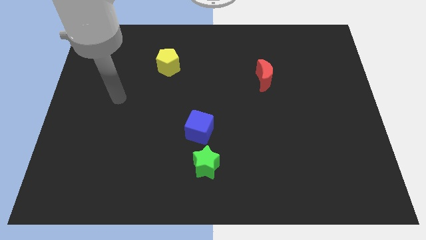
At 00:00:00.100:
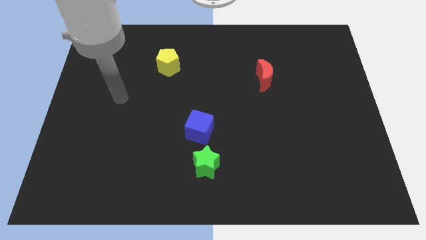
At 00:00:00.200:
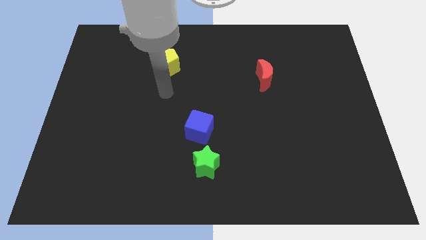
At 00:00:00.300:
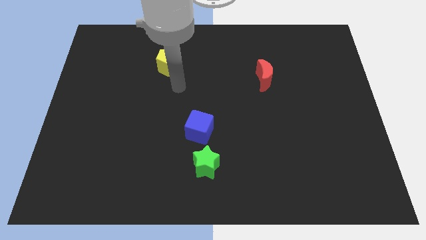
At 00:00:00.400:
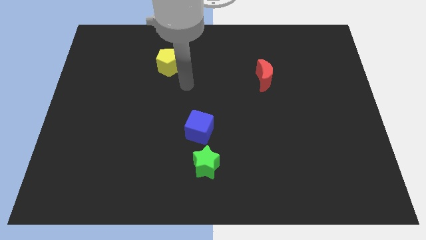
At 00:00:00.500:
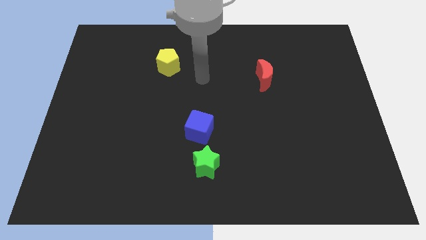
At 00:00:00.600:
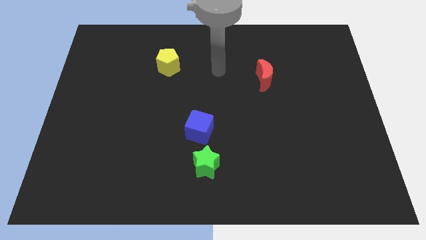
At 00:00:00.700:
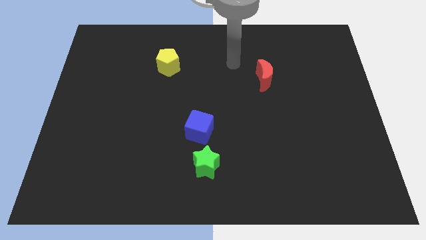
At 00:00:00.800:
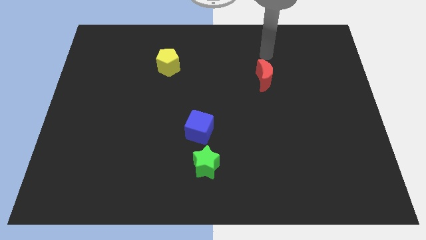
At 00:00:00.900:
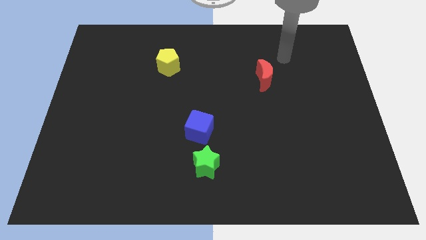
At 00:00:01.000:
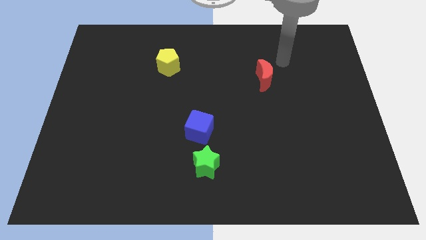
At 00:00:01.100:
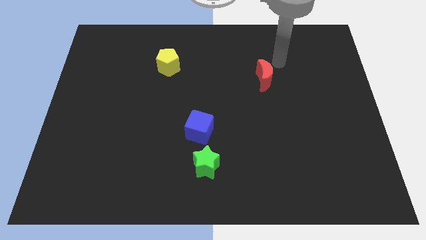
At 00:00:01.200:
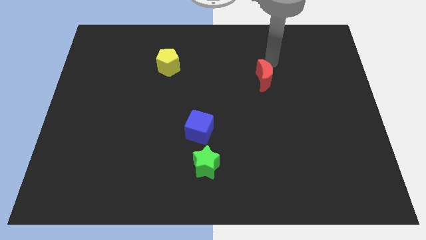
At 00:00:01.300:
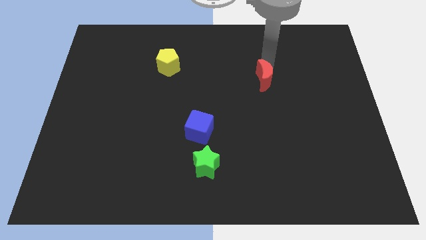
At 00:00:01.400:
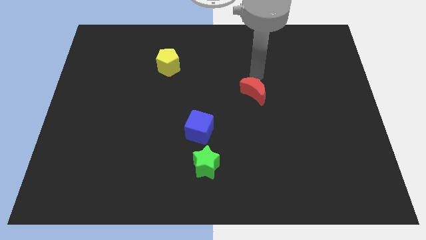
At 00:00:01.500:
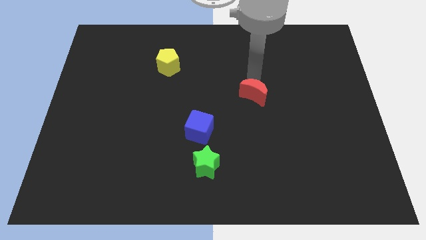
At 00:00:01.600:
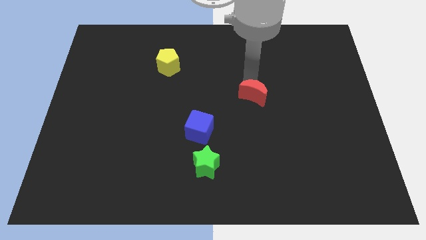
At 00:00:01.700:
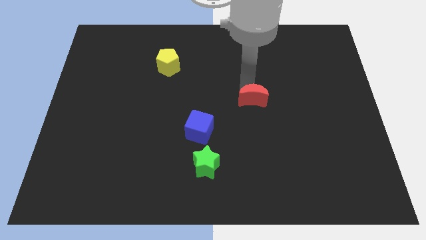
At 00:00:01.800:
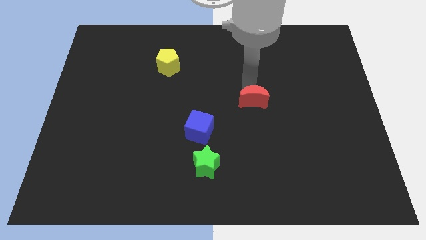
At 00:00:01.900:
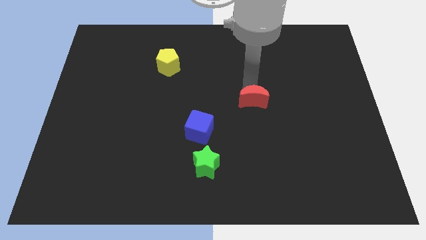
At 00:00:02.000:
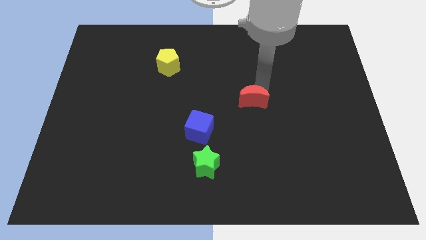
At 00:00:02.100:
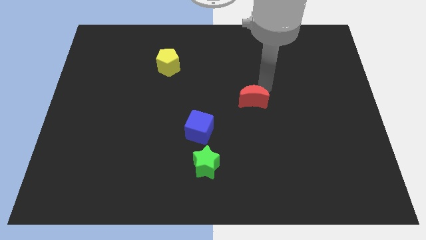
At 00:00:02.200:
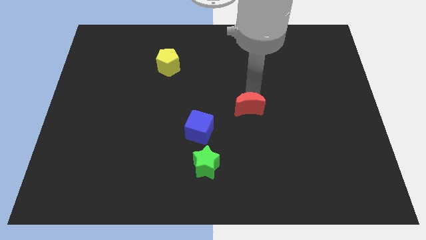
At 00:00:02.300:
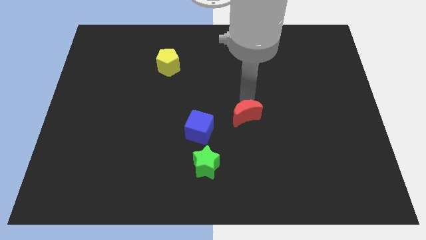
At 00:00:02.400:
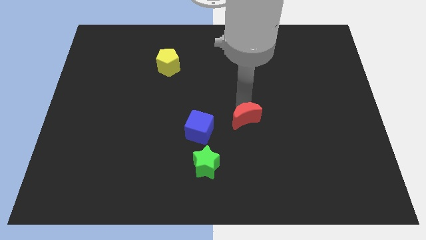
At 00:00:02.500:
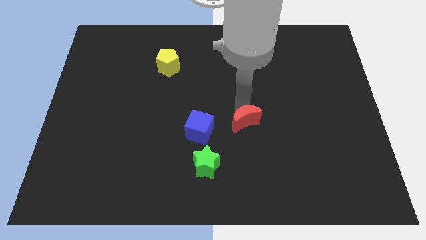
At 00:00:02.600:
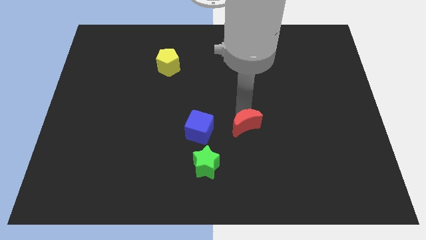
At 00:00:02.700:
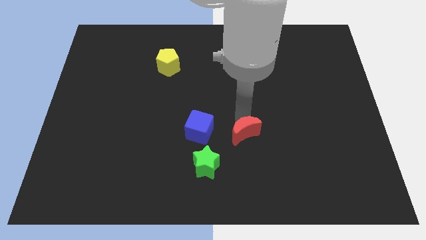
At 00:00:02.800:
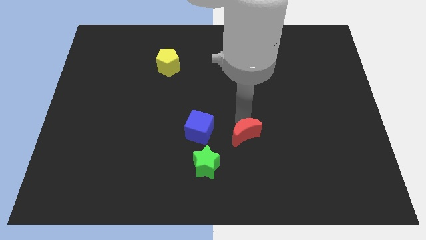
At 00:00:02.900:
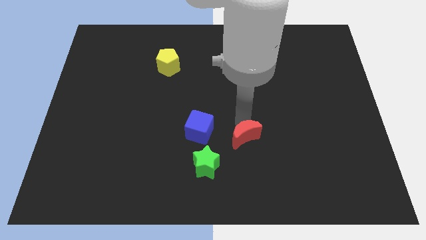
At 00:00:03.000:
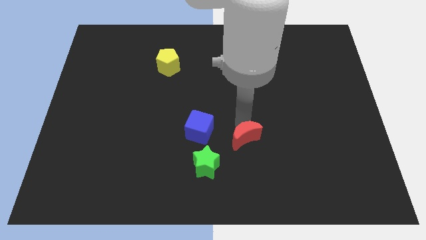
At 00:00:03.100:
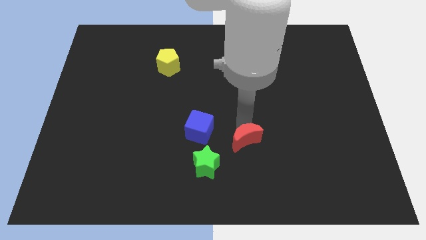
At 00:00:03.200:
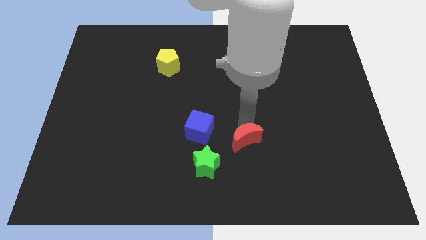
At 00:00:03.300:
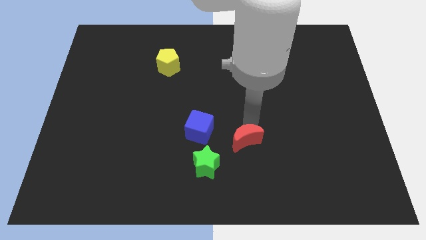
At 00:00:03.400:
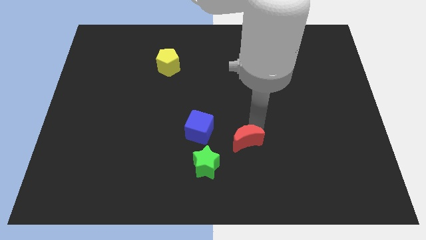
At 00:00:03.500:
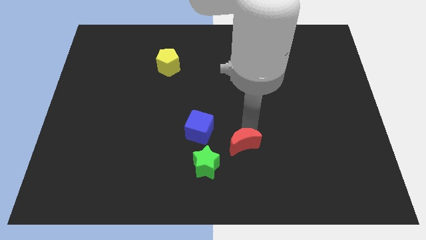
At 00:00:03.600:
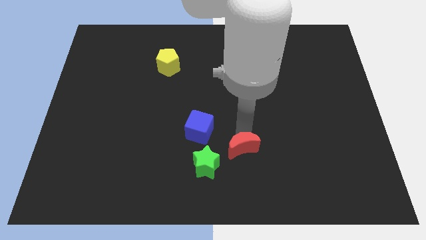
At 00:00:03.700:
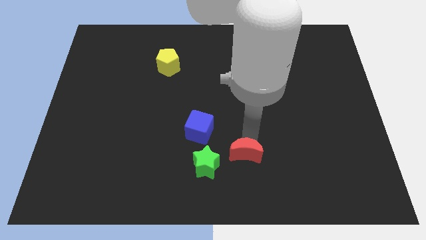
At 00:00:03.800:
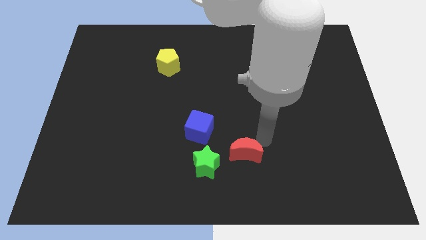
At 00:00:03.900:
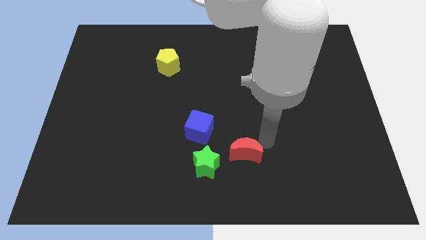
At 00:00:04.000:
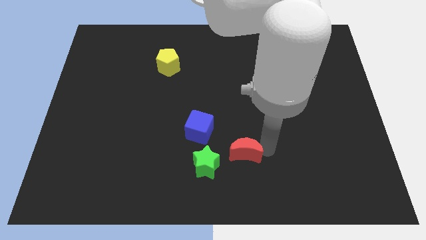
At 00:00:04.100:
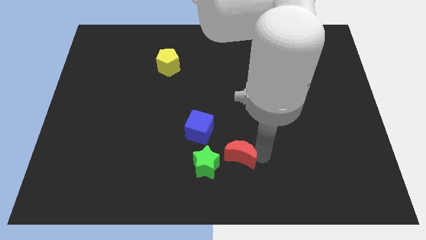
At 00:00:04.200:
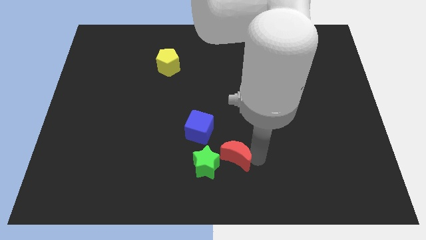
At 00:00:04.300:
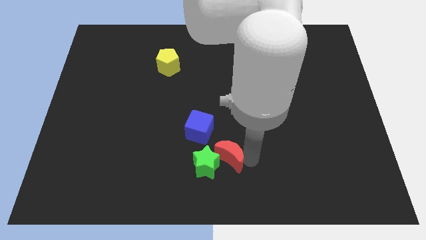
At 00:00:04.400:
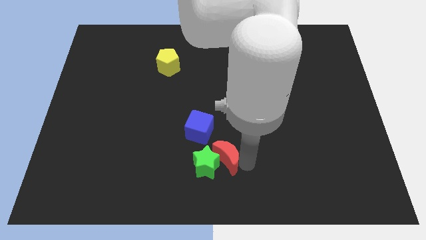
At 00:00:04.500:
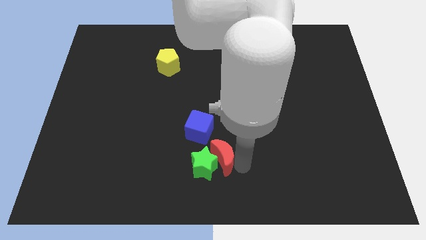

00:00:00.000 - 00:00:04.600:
push the red block to the green star

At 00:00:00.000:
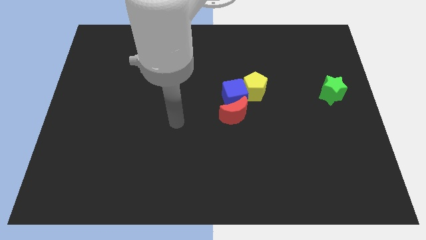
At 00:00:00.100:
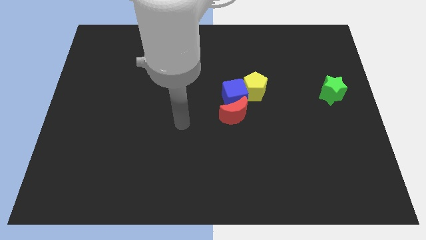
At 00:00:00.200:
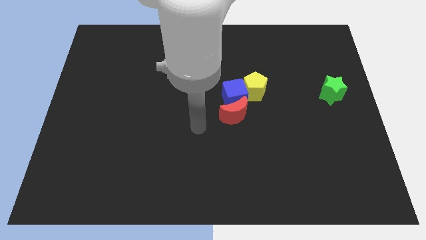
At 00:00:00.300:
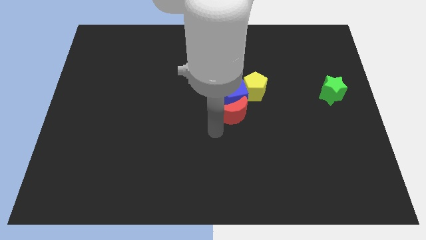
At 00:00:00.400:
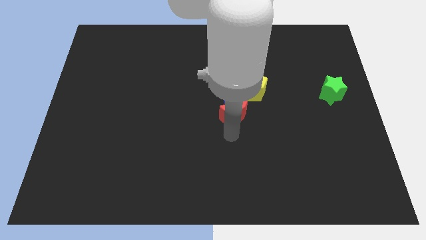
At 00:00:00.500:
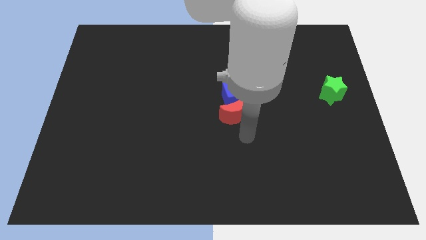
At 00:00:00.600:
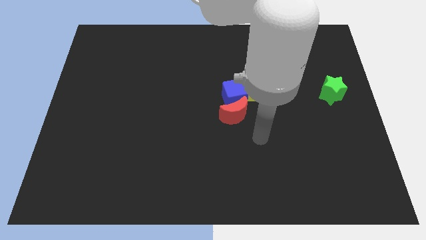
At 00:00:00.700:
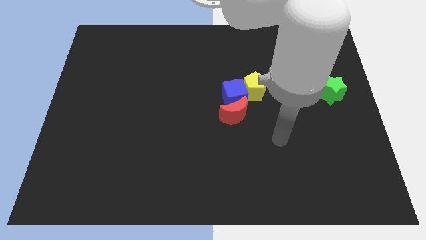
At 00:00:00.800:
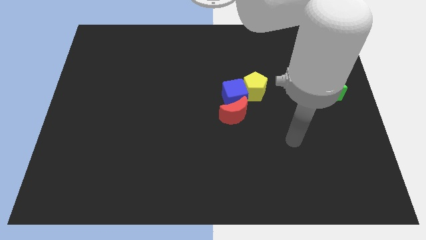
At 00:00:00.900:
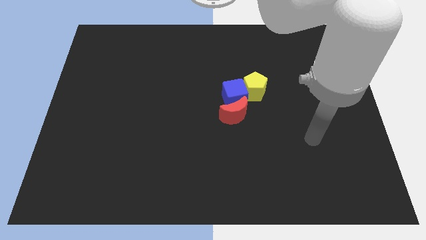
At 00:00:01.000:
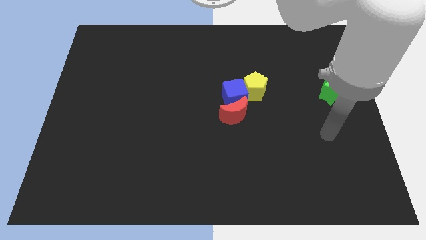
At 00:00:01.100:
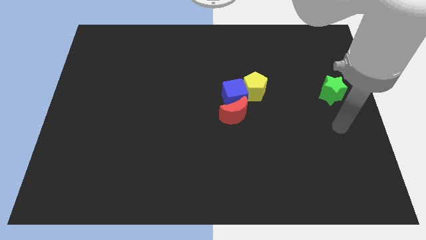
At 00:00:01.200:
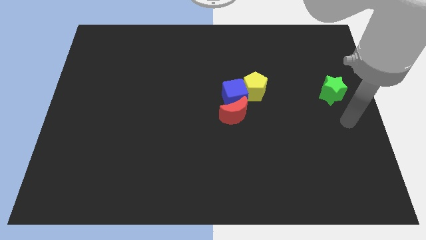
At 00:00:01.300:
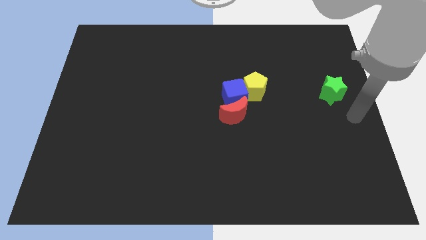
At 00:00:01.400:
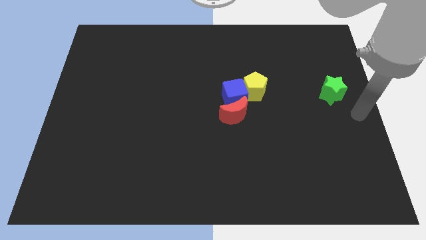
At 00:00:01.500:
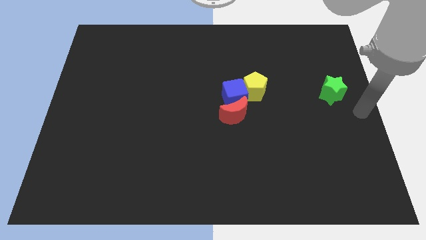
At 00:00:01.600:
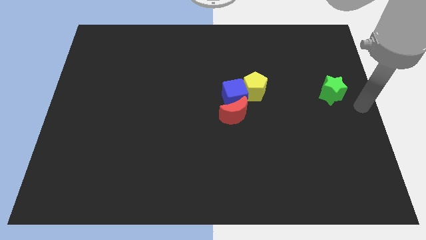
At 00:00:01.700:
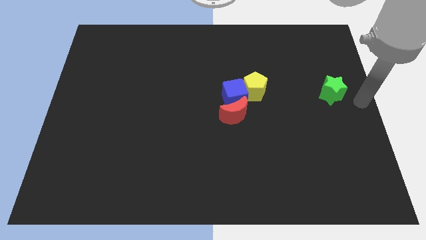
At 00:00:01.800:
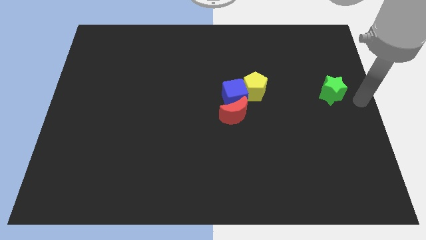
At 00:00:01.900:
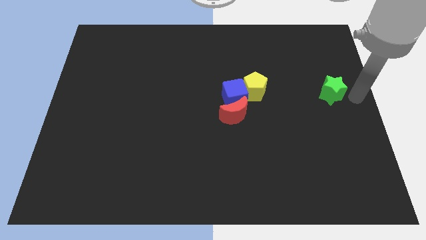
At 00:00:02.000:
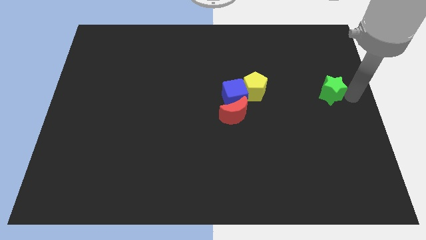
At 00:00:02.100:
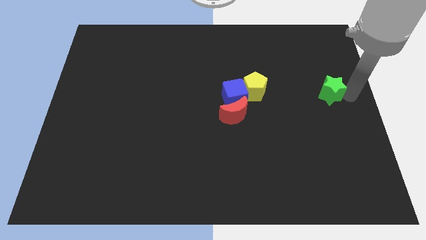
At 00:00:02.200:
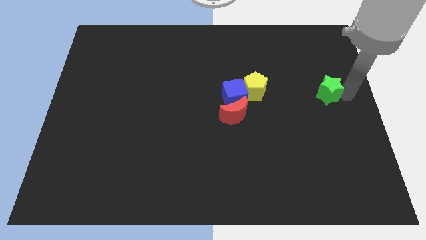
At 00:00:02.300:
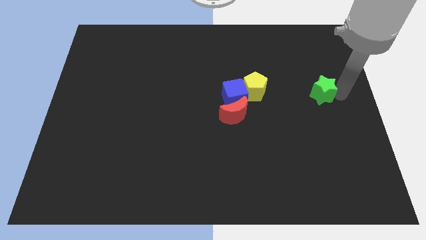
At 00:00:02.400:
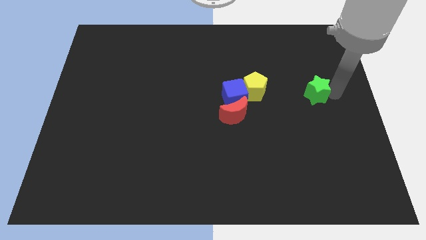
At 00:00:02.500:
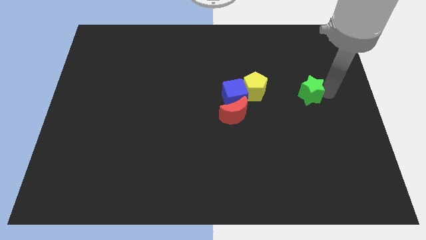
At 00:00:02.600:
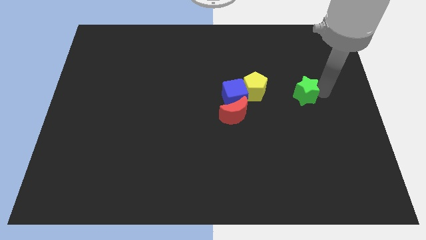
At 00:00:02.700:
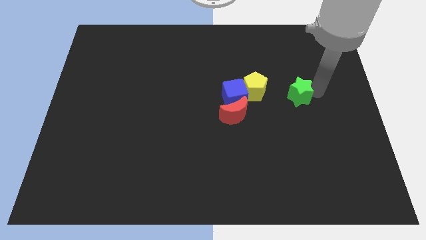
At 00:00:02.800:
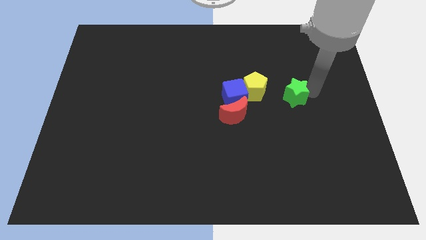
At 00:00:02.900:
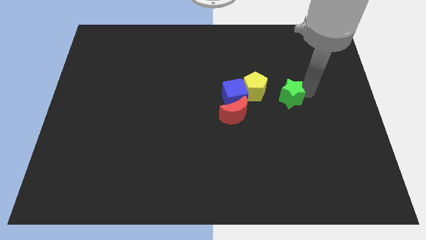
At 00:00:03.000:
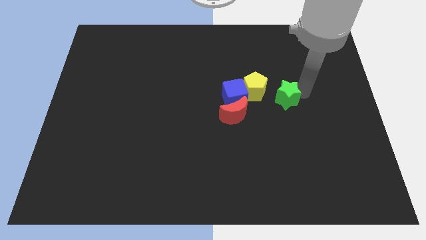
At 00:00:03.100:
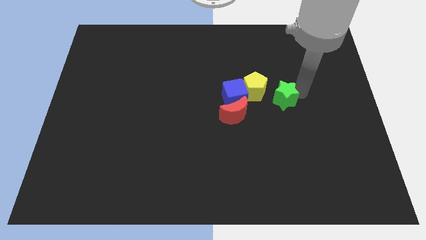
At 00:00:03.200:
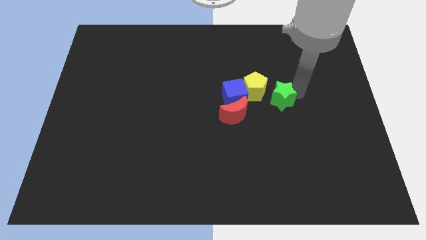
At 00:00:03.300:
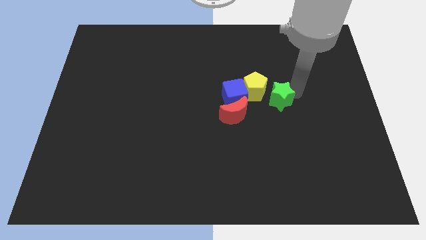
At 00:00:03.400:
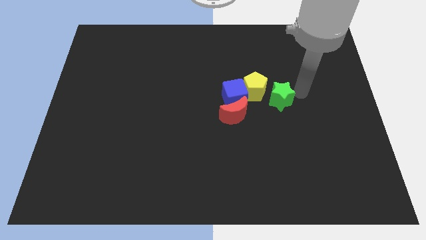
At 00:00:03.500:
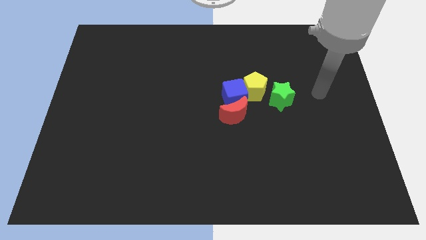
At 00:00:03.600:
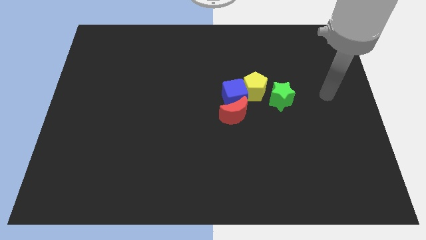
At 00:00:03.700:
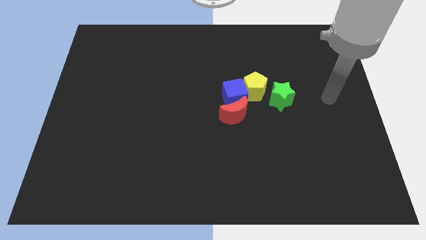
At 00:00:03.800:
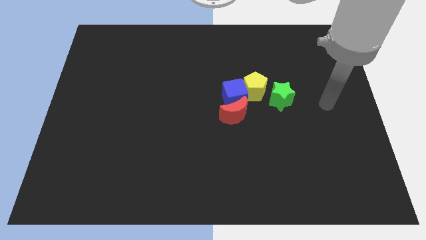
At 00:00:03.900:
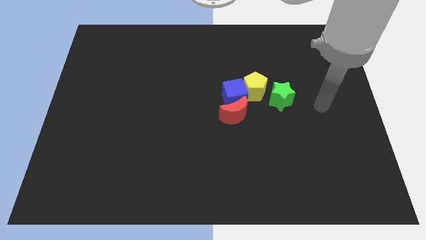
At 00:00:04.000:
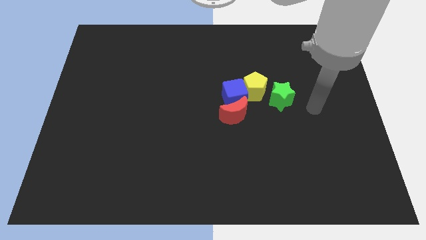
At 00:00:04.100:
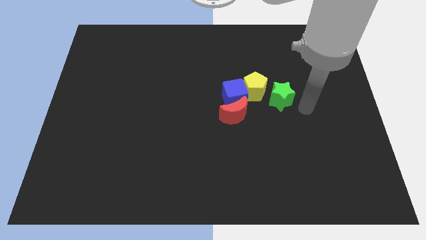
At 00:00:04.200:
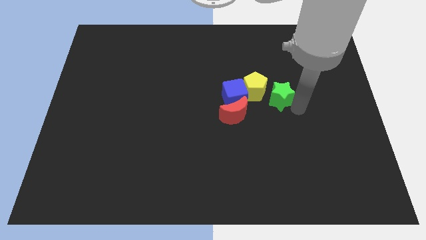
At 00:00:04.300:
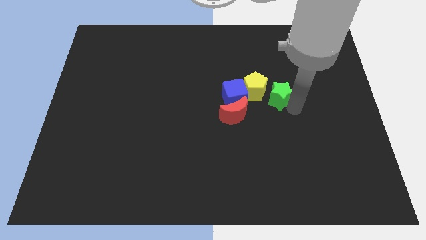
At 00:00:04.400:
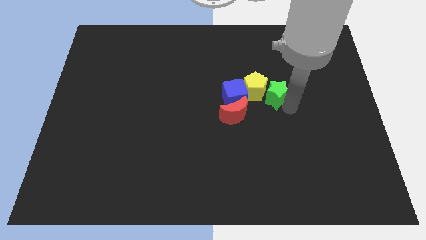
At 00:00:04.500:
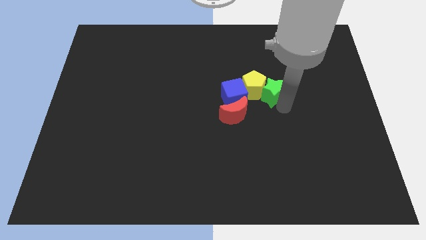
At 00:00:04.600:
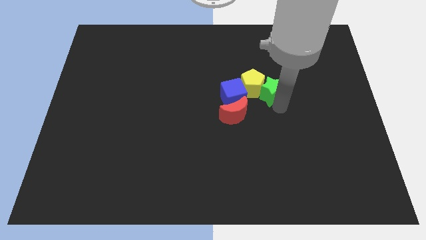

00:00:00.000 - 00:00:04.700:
push the green block next to the pentagon
